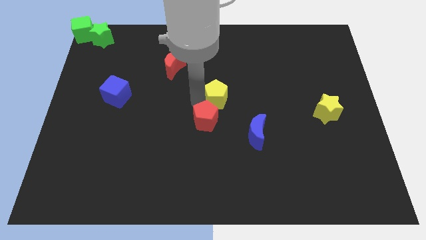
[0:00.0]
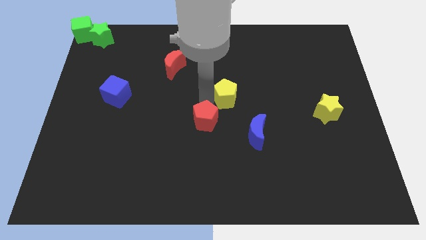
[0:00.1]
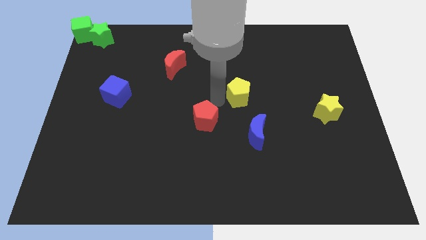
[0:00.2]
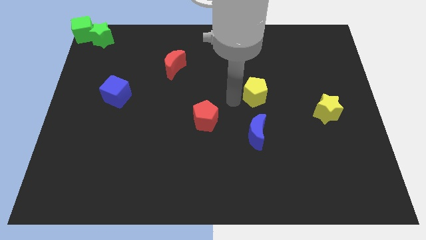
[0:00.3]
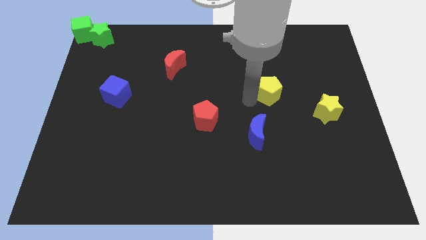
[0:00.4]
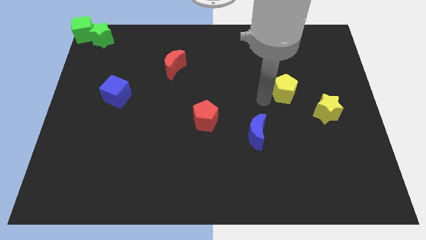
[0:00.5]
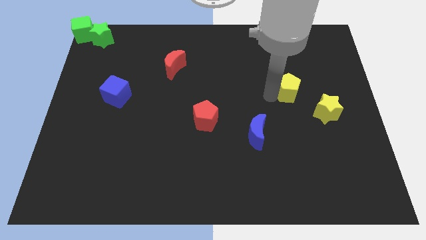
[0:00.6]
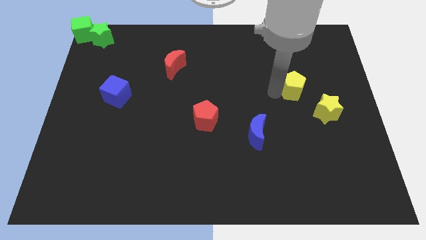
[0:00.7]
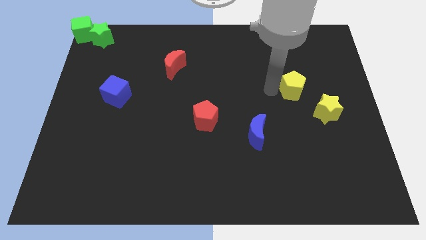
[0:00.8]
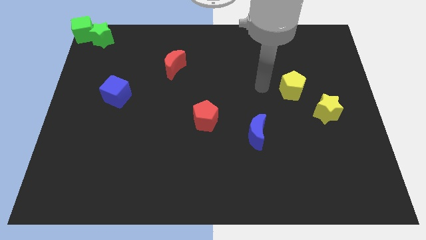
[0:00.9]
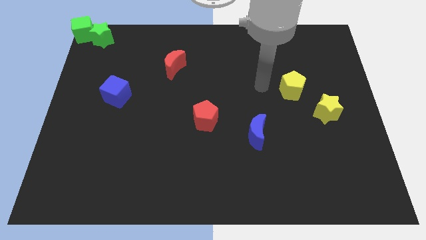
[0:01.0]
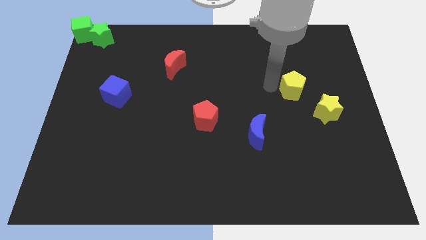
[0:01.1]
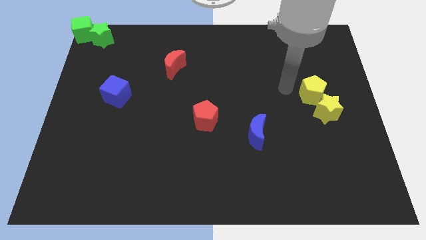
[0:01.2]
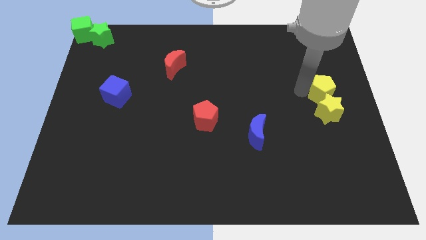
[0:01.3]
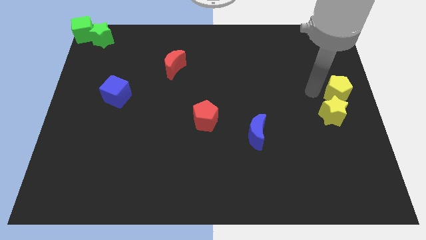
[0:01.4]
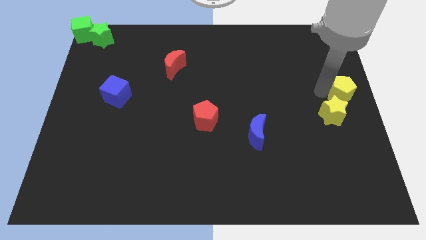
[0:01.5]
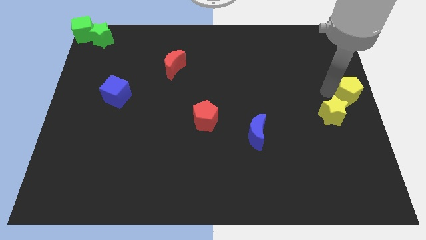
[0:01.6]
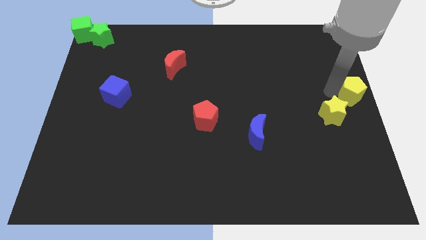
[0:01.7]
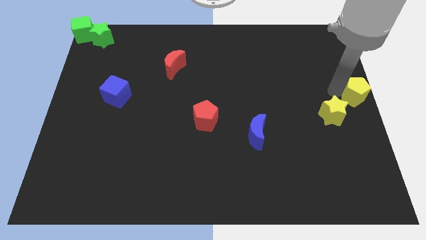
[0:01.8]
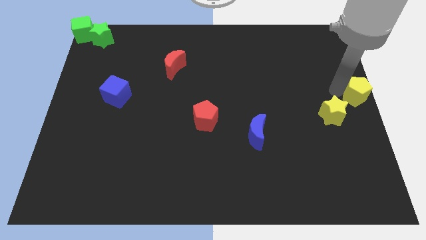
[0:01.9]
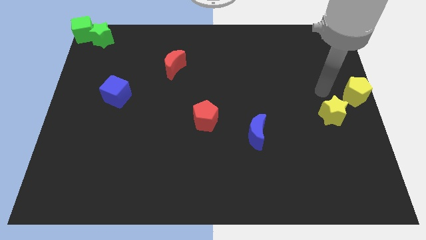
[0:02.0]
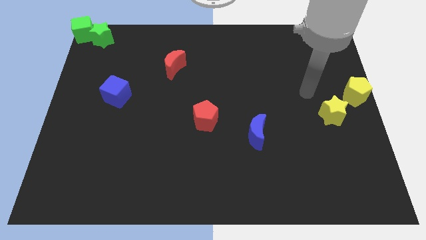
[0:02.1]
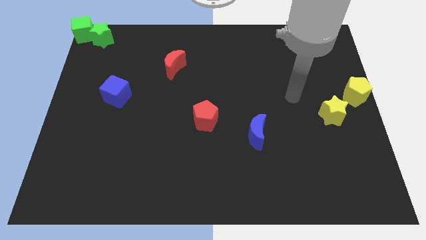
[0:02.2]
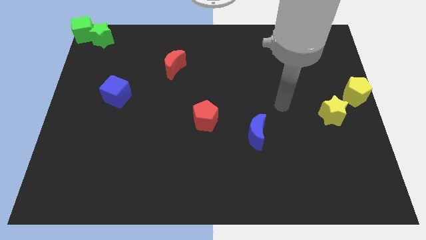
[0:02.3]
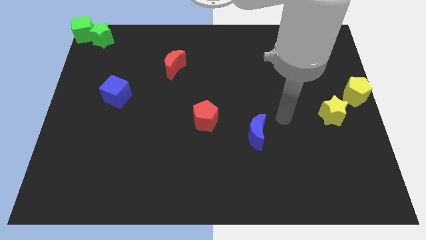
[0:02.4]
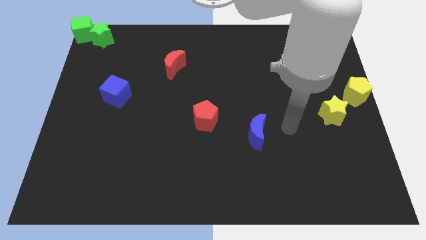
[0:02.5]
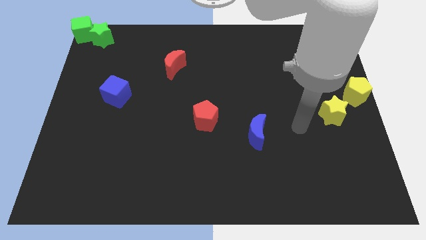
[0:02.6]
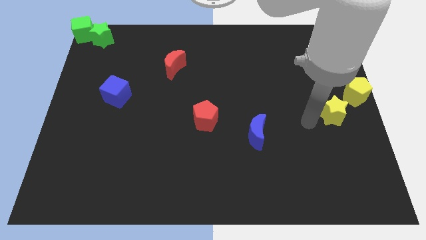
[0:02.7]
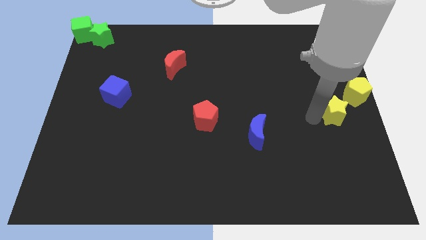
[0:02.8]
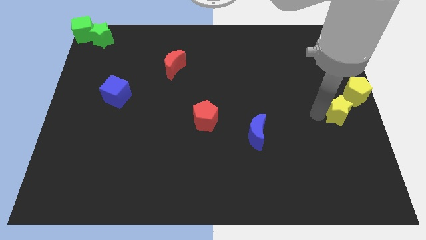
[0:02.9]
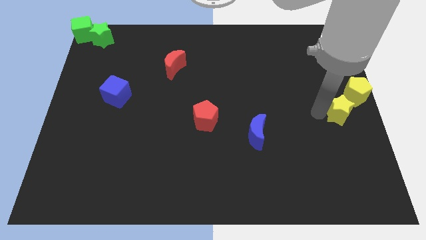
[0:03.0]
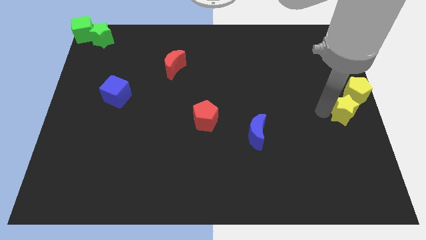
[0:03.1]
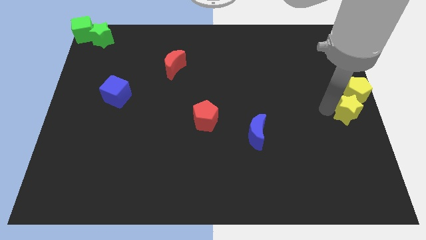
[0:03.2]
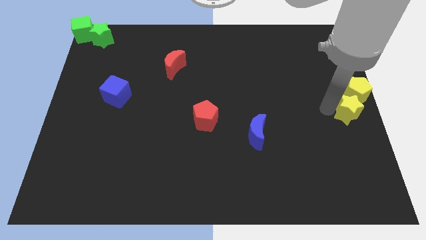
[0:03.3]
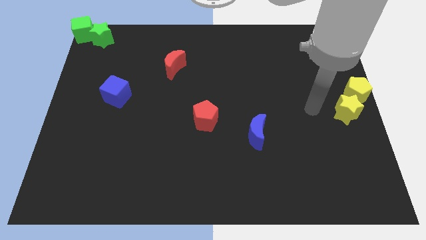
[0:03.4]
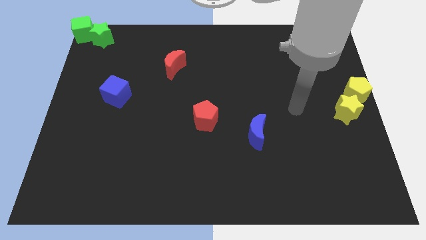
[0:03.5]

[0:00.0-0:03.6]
move the yellow star and yellow pentagon towards the center right side of the board

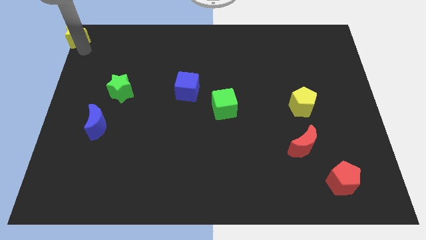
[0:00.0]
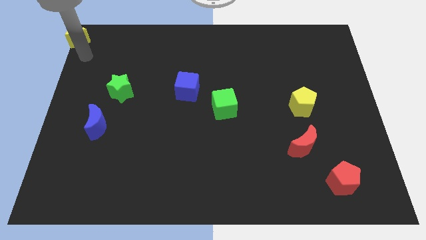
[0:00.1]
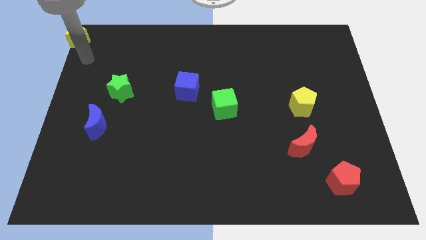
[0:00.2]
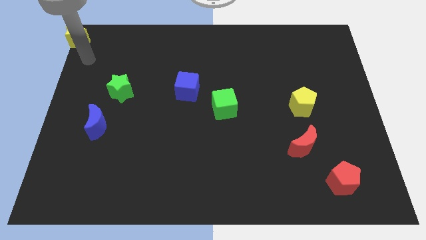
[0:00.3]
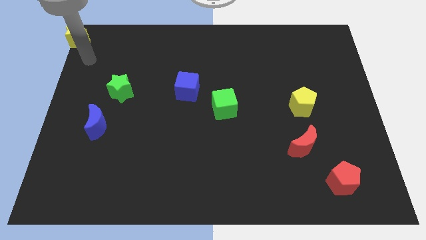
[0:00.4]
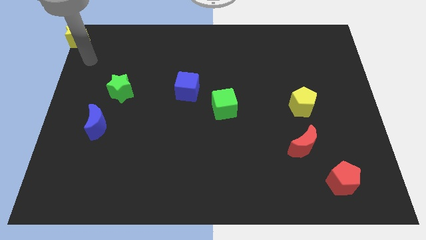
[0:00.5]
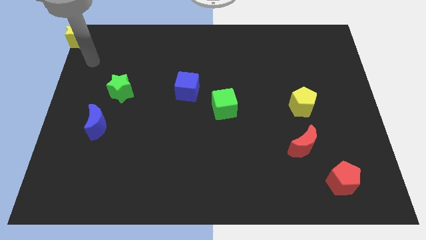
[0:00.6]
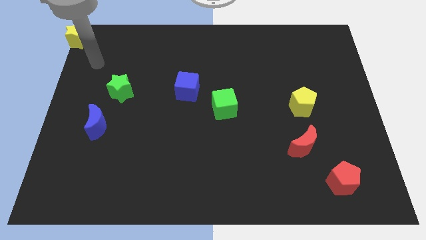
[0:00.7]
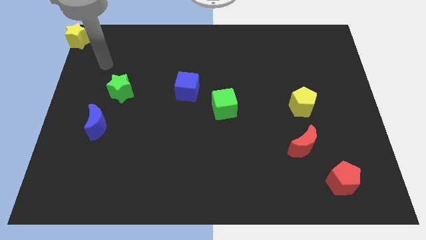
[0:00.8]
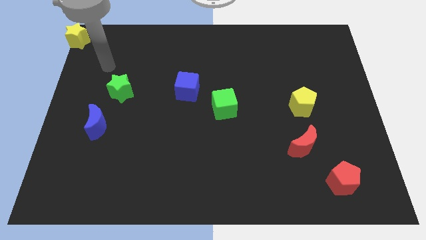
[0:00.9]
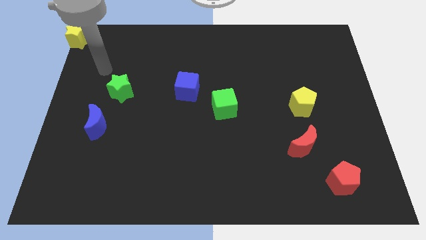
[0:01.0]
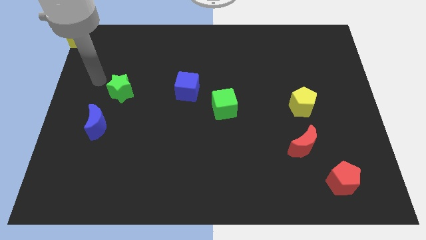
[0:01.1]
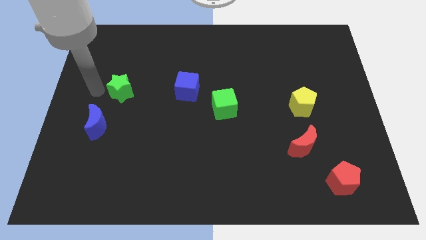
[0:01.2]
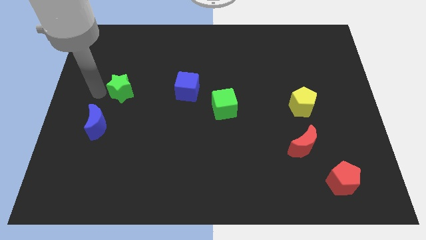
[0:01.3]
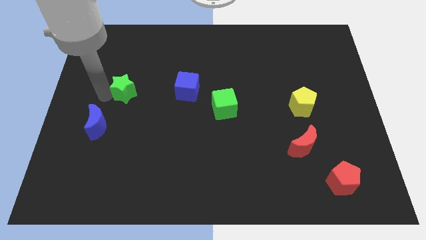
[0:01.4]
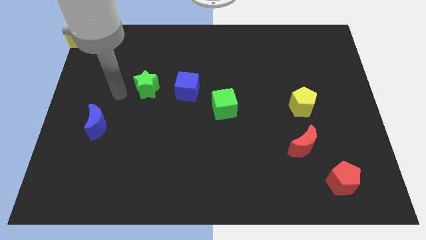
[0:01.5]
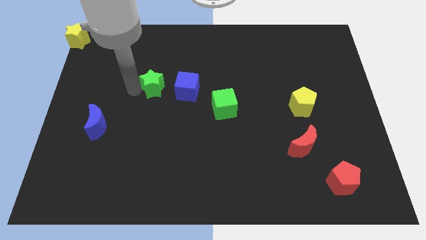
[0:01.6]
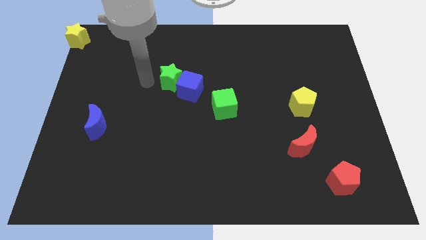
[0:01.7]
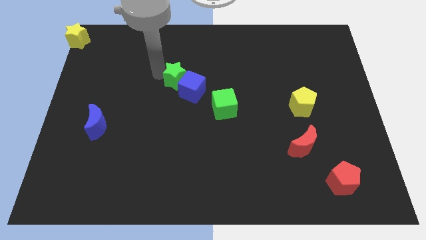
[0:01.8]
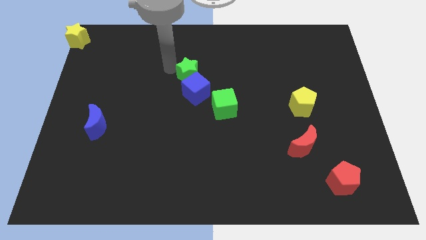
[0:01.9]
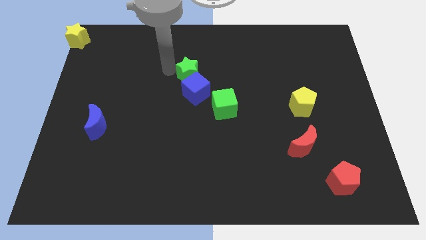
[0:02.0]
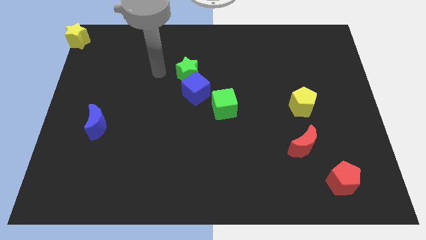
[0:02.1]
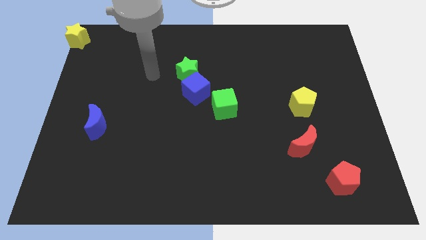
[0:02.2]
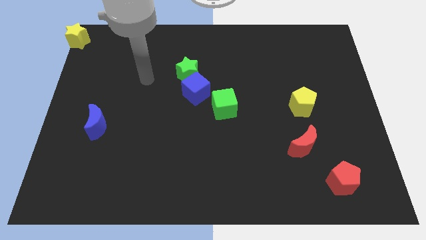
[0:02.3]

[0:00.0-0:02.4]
push the green star into the blue cube

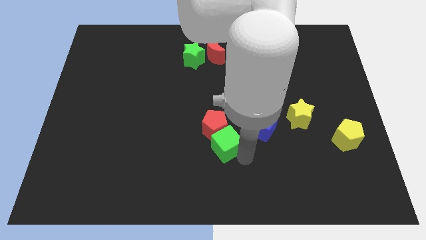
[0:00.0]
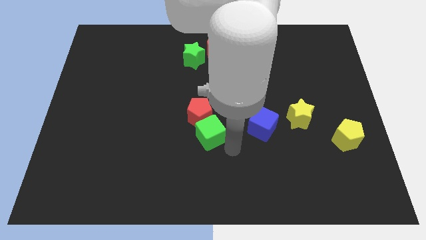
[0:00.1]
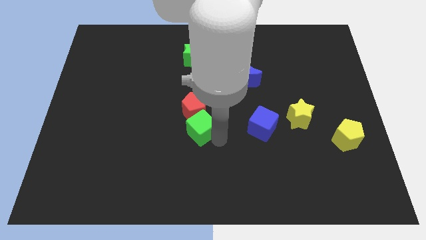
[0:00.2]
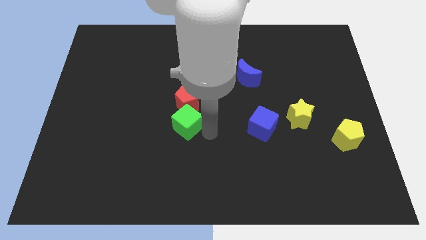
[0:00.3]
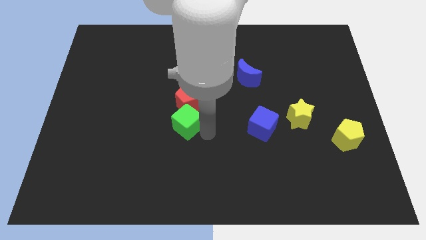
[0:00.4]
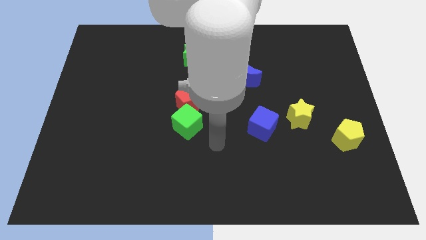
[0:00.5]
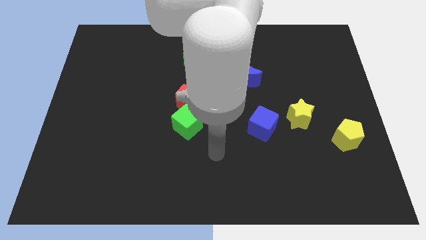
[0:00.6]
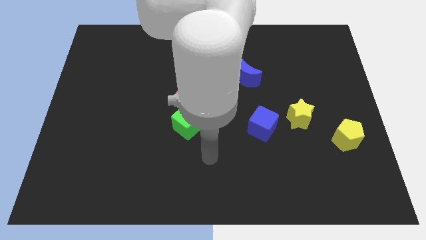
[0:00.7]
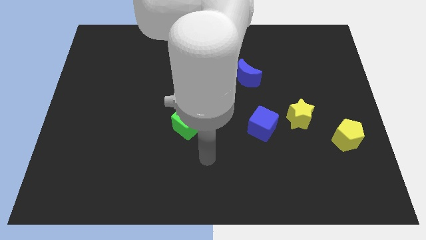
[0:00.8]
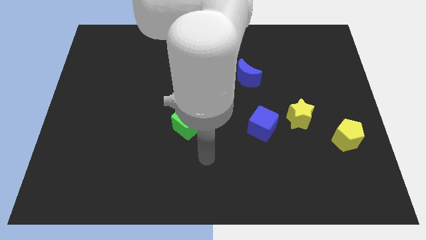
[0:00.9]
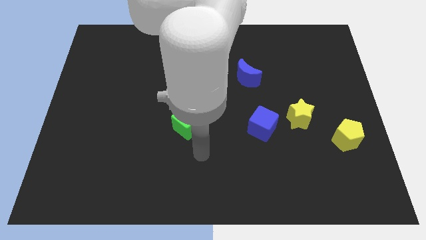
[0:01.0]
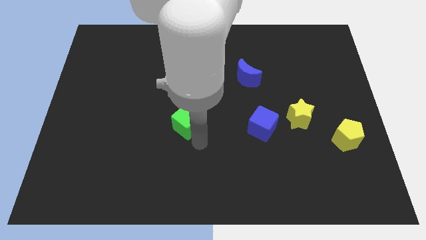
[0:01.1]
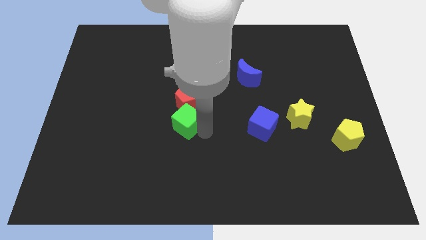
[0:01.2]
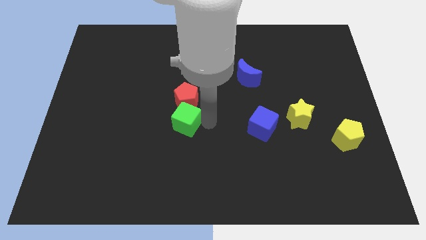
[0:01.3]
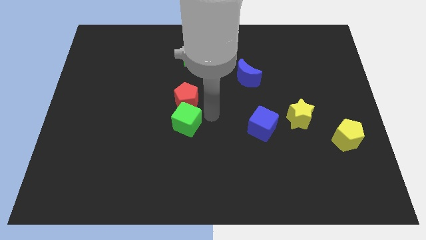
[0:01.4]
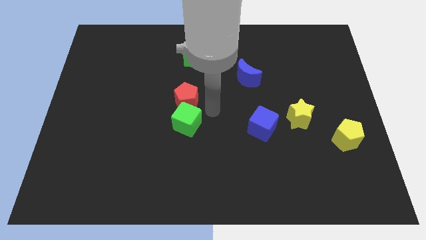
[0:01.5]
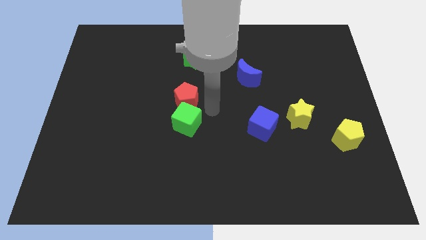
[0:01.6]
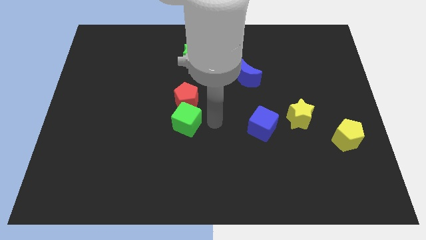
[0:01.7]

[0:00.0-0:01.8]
push green cube parallel to blue cube

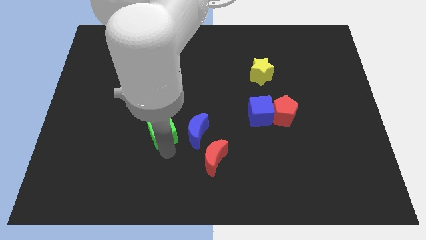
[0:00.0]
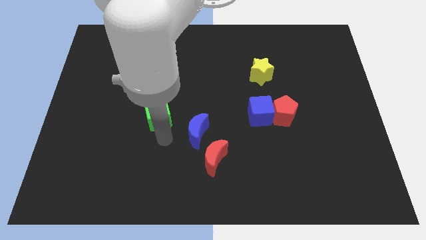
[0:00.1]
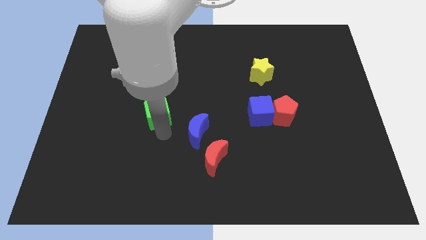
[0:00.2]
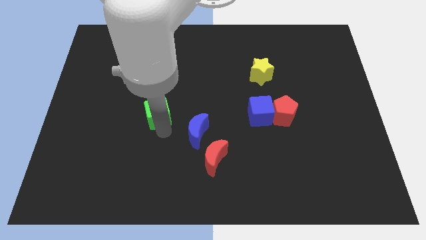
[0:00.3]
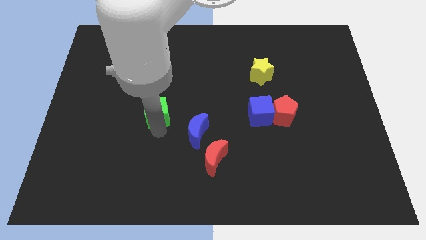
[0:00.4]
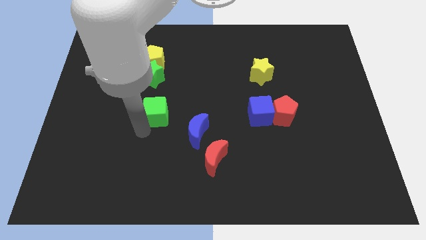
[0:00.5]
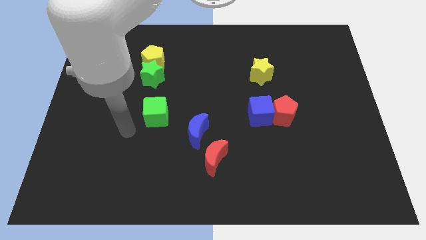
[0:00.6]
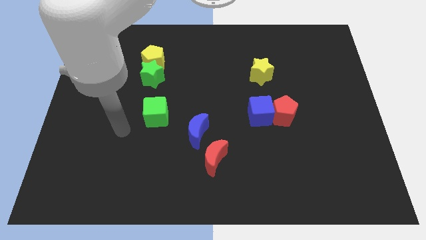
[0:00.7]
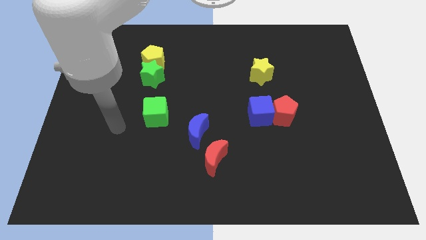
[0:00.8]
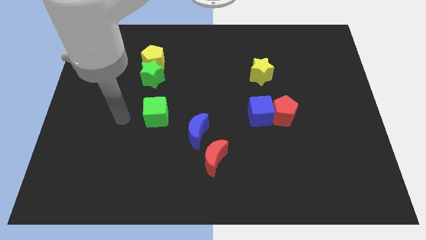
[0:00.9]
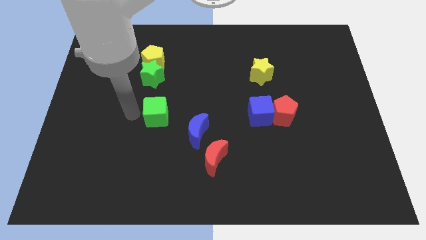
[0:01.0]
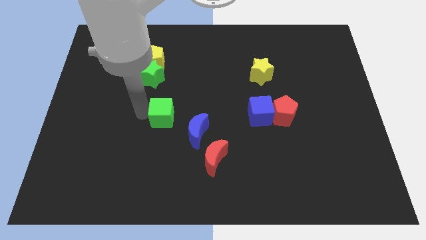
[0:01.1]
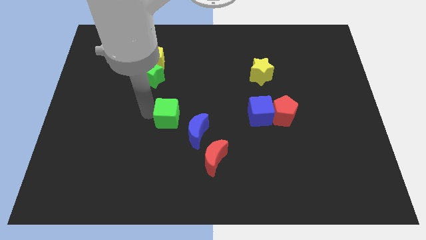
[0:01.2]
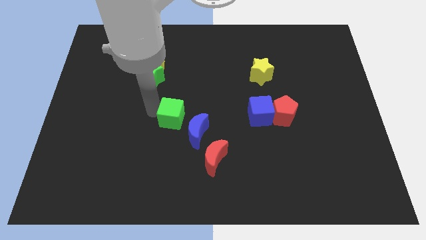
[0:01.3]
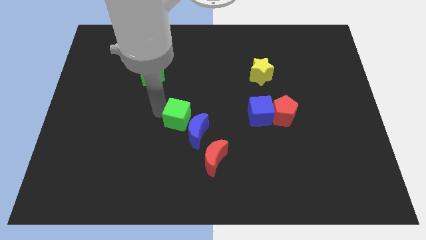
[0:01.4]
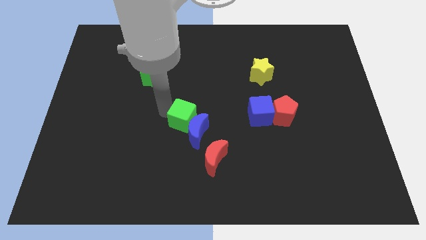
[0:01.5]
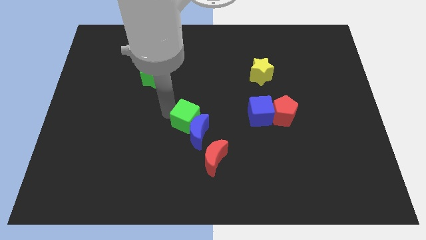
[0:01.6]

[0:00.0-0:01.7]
push the green cube into the blue moon
